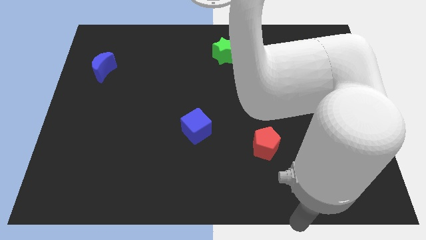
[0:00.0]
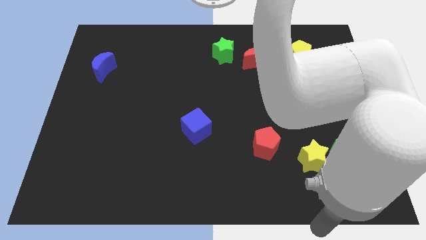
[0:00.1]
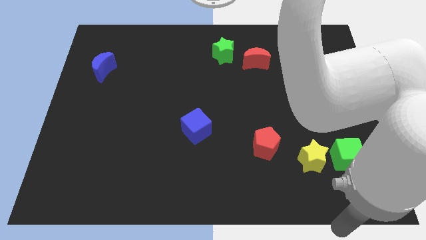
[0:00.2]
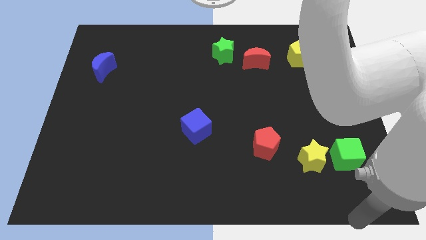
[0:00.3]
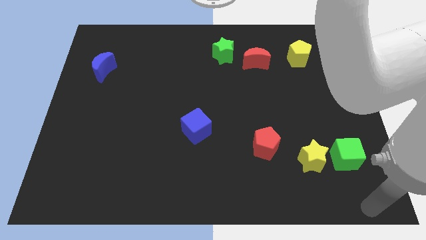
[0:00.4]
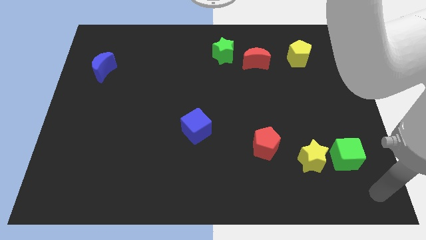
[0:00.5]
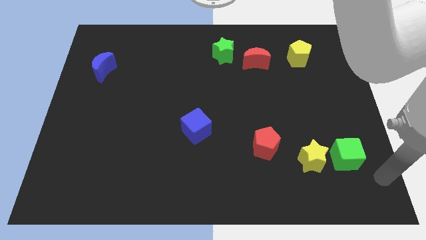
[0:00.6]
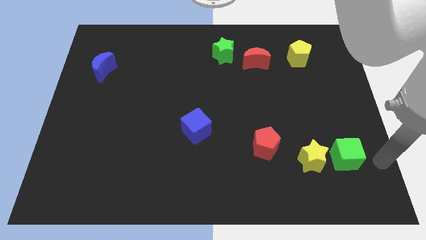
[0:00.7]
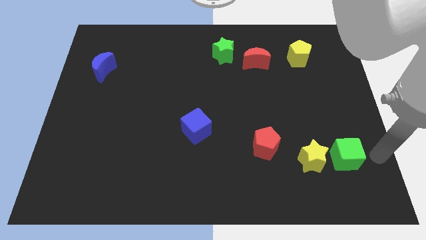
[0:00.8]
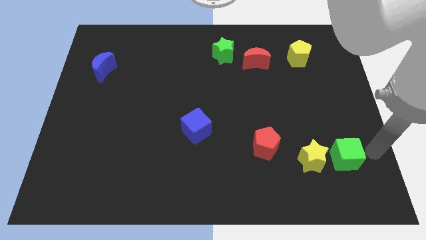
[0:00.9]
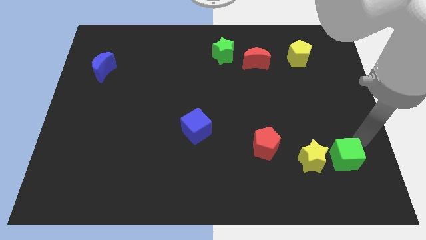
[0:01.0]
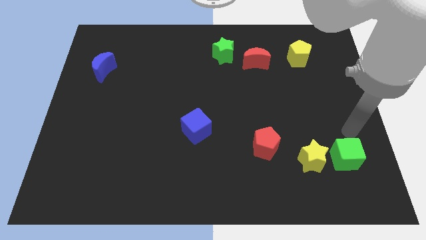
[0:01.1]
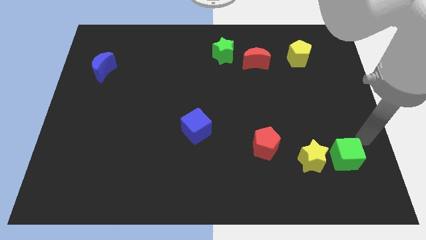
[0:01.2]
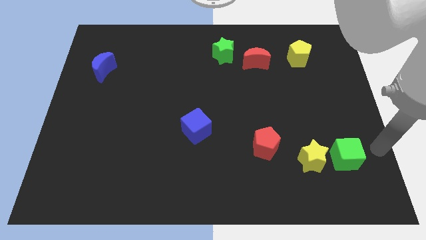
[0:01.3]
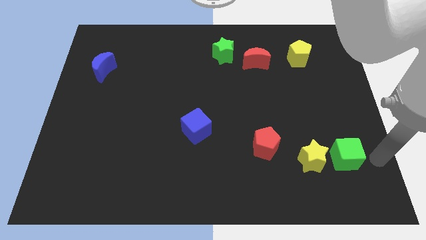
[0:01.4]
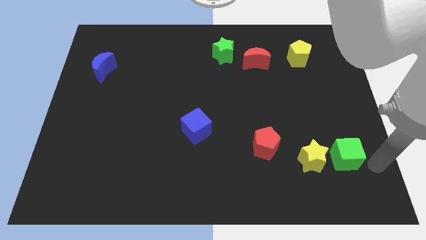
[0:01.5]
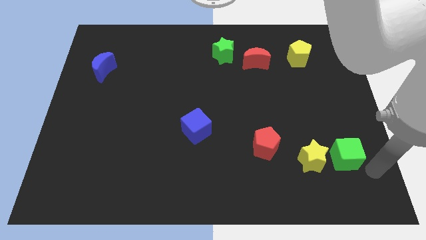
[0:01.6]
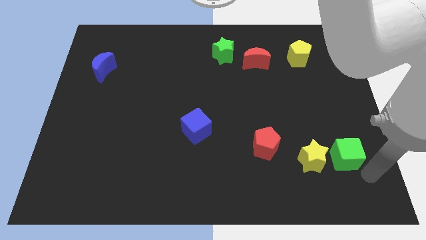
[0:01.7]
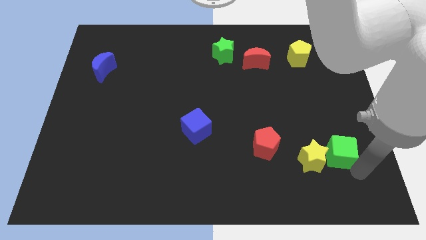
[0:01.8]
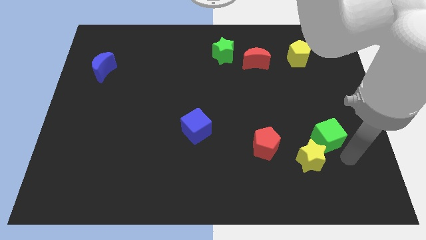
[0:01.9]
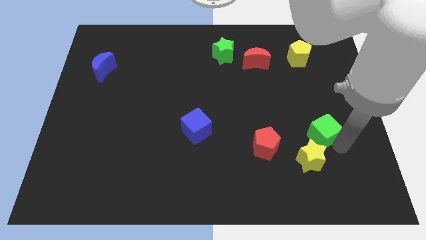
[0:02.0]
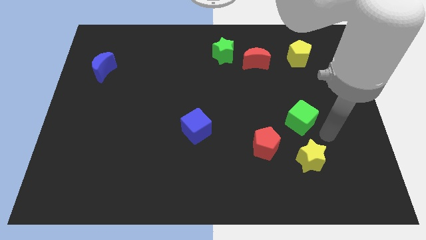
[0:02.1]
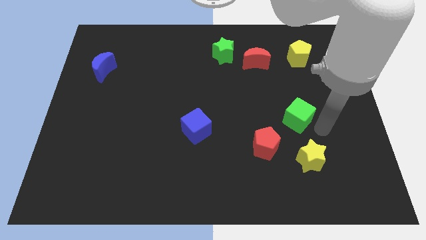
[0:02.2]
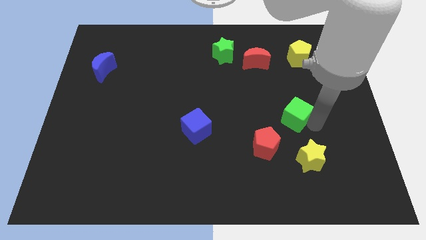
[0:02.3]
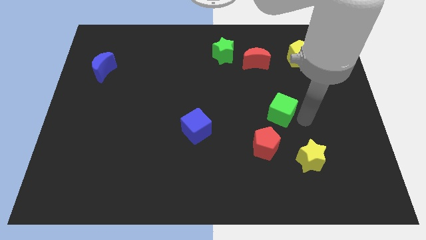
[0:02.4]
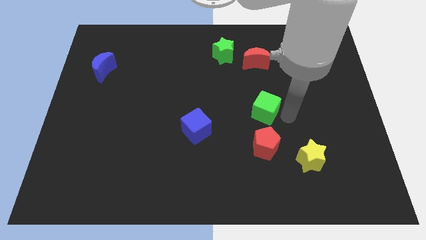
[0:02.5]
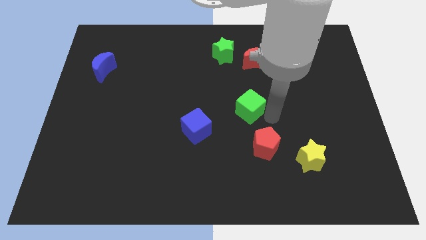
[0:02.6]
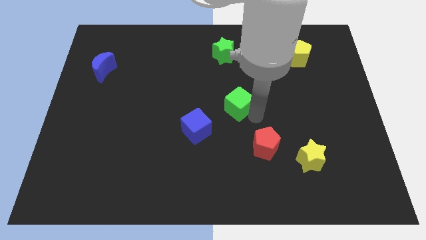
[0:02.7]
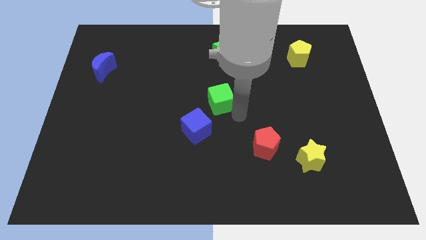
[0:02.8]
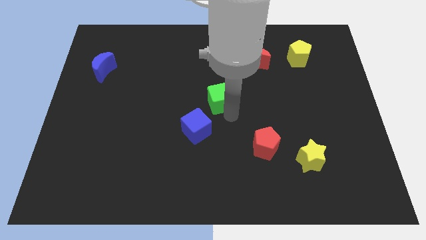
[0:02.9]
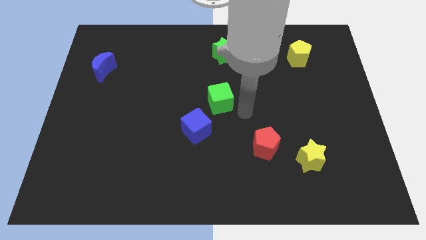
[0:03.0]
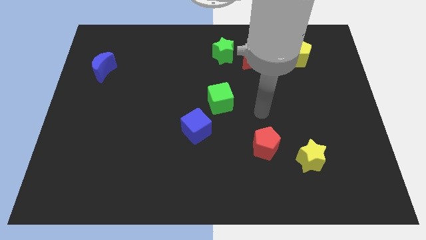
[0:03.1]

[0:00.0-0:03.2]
put the green cube vertically below the green star

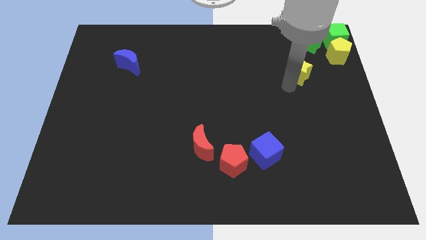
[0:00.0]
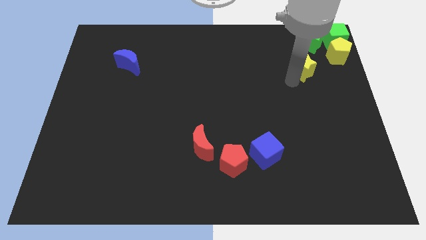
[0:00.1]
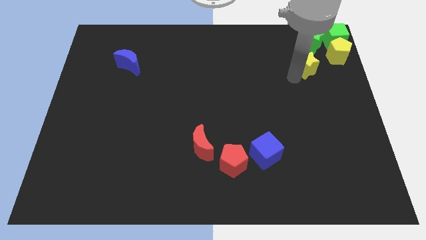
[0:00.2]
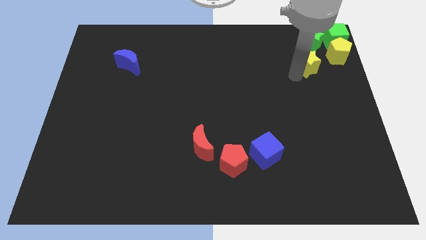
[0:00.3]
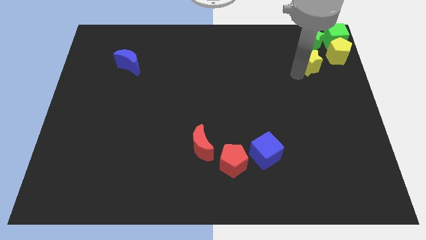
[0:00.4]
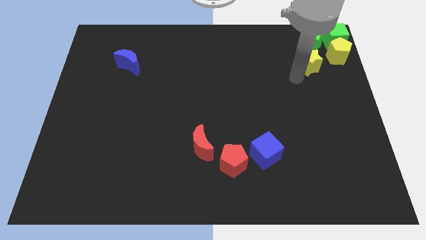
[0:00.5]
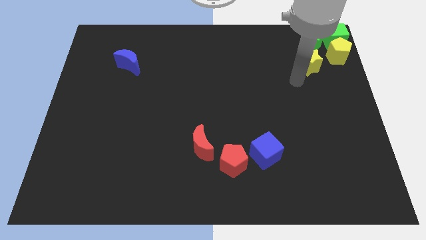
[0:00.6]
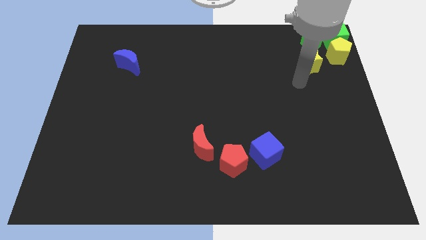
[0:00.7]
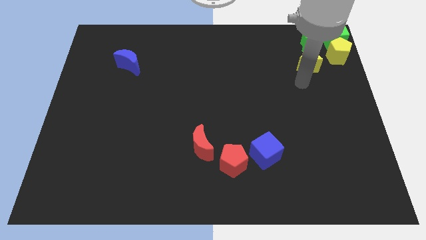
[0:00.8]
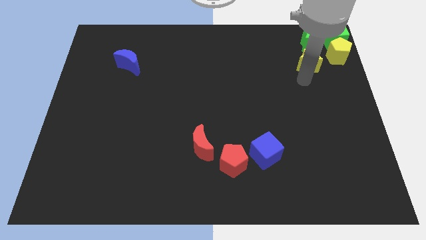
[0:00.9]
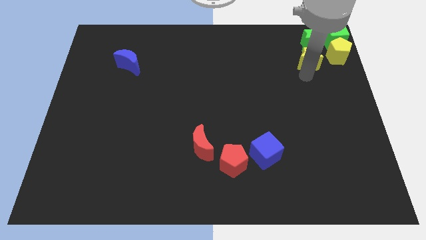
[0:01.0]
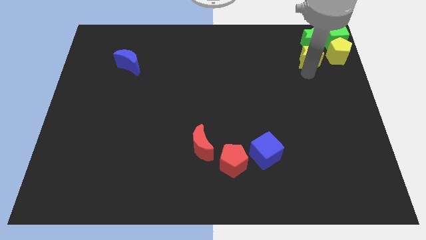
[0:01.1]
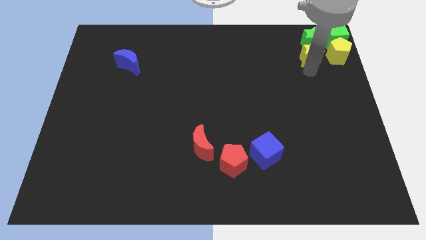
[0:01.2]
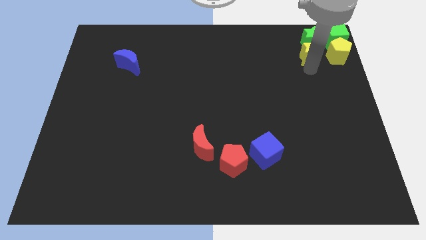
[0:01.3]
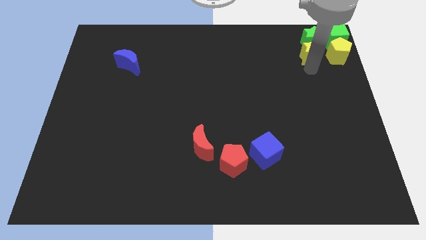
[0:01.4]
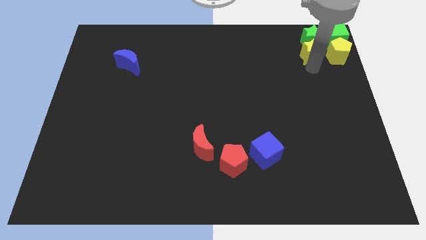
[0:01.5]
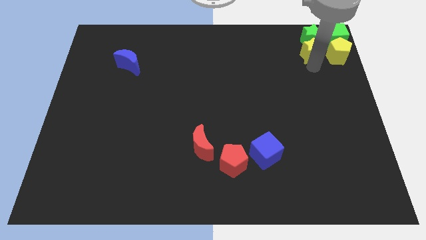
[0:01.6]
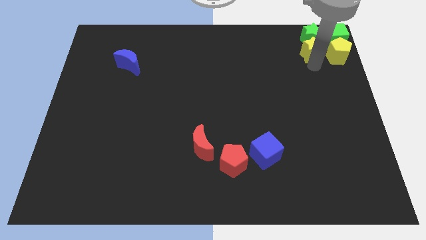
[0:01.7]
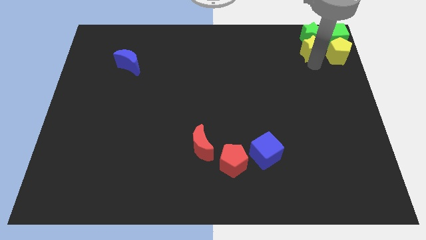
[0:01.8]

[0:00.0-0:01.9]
move the yellow star into the green star

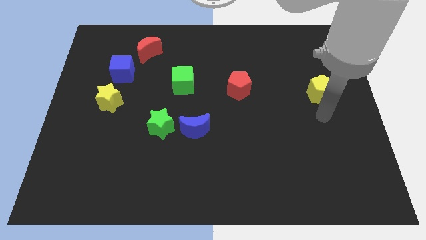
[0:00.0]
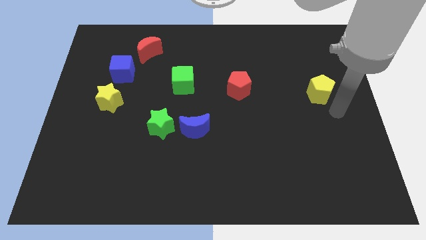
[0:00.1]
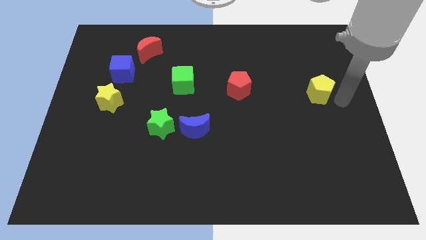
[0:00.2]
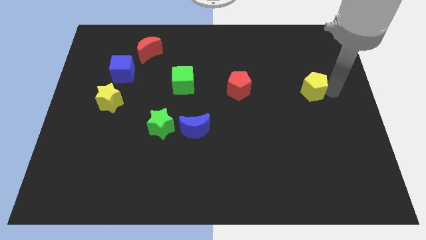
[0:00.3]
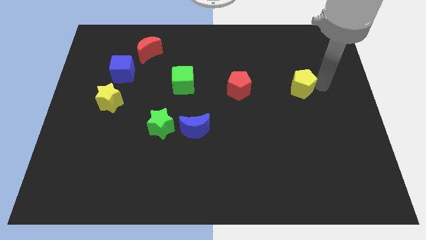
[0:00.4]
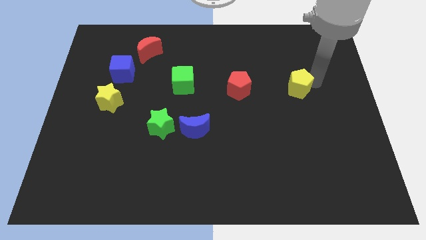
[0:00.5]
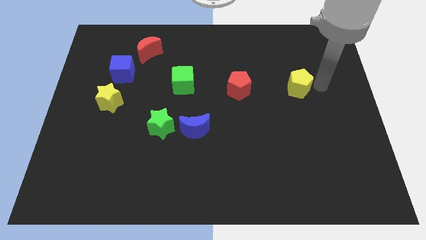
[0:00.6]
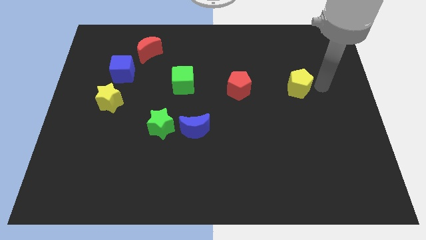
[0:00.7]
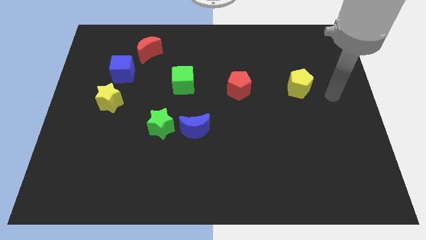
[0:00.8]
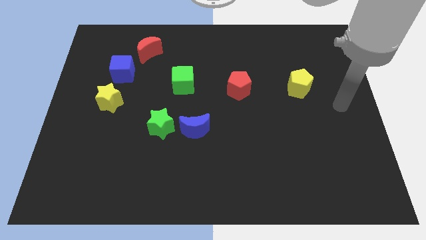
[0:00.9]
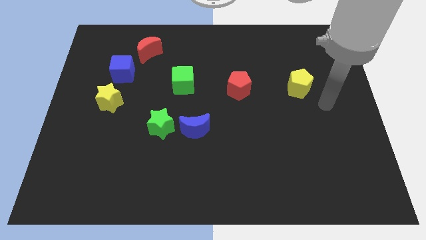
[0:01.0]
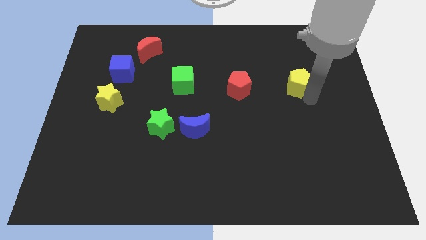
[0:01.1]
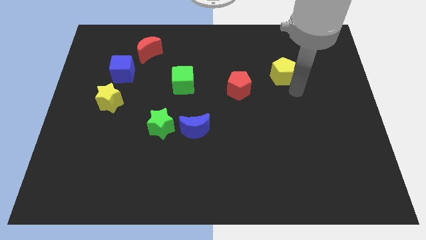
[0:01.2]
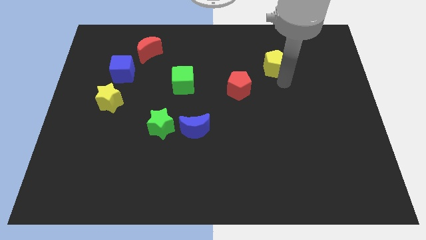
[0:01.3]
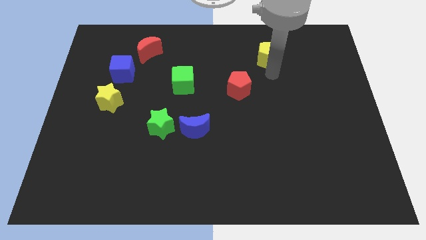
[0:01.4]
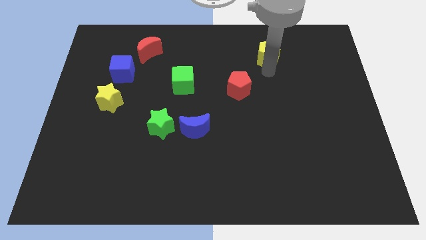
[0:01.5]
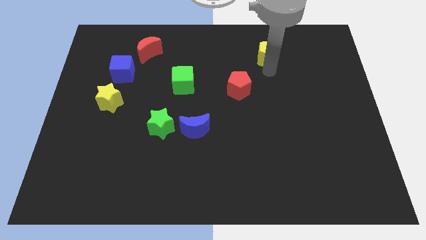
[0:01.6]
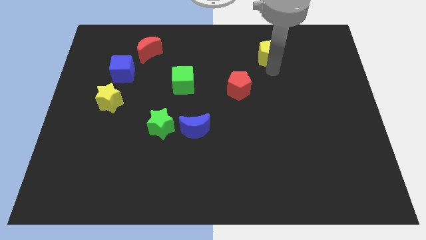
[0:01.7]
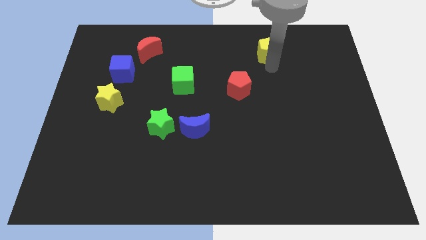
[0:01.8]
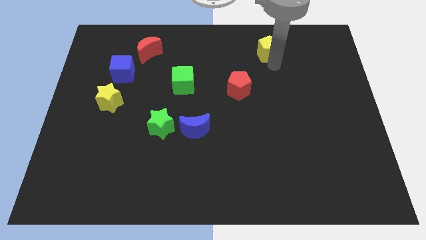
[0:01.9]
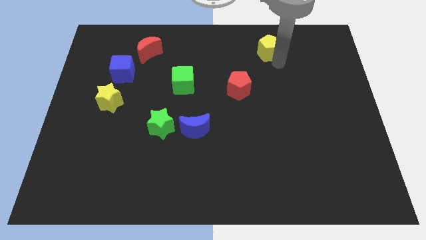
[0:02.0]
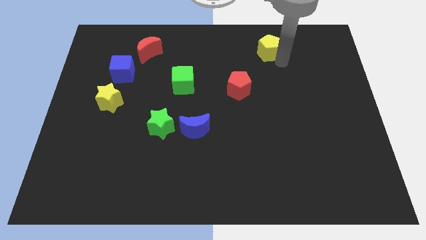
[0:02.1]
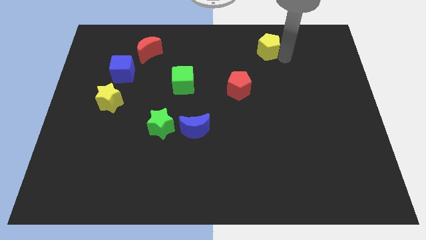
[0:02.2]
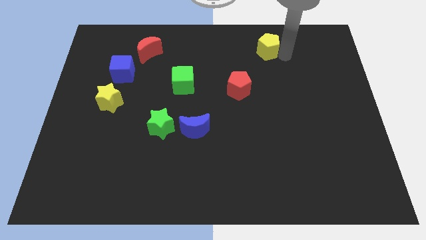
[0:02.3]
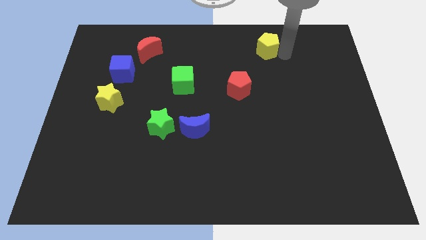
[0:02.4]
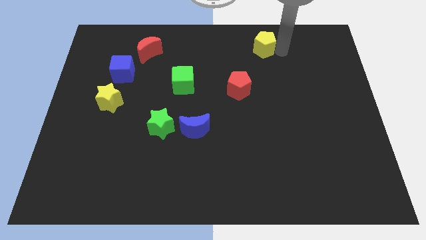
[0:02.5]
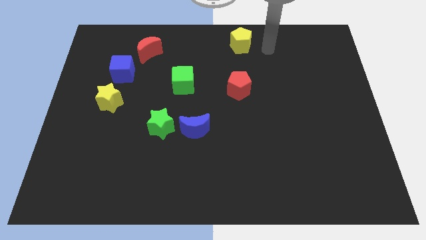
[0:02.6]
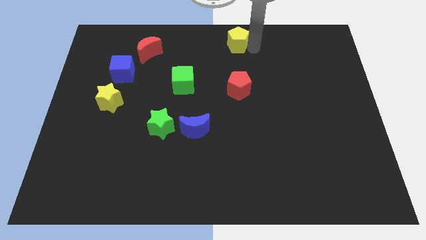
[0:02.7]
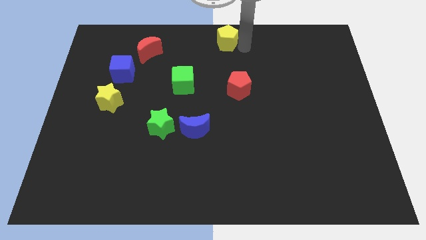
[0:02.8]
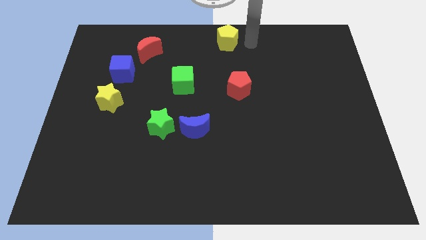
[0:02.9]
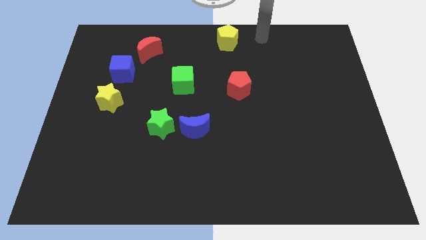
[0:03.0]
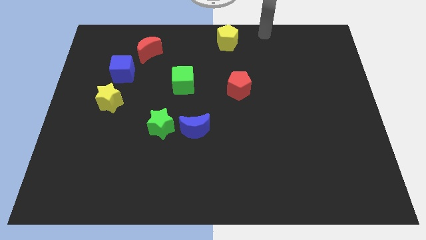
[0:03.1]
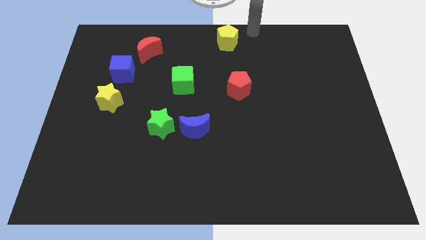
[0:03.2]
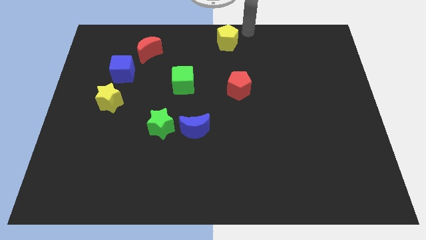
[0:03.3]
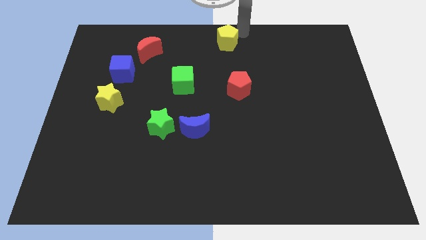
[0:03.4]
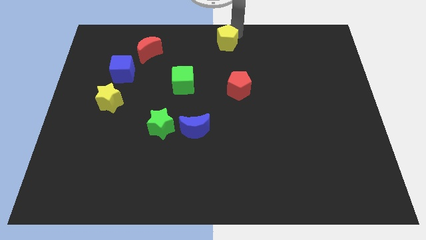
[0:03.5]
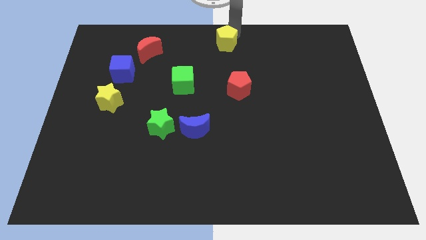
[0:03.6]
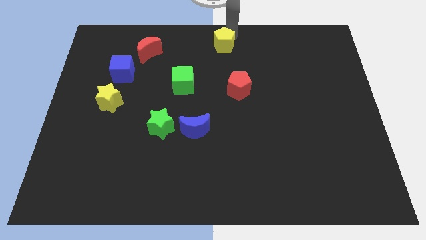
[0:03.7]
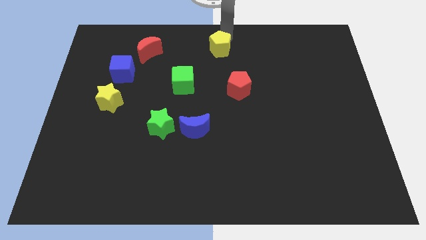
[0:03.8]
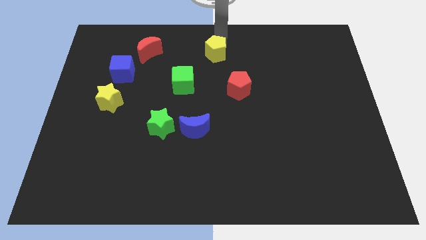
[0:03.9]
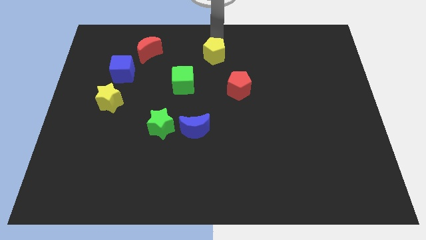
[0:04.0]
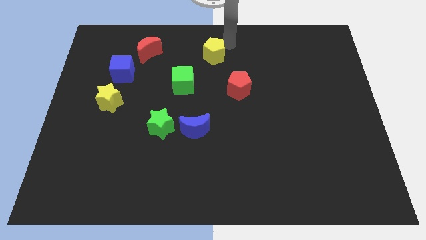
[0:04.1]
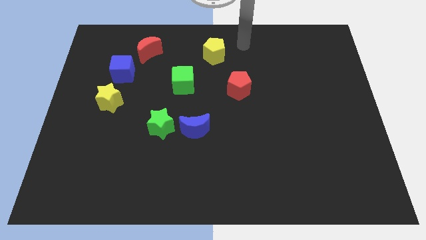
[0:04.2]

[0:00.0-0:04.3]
move the yellow pentagon on the top right to the green cube
